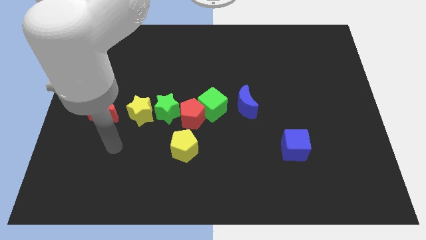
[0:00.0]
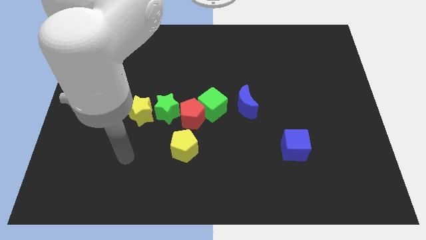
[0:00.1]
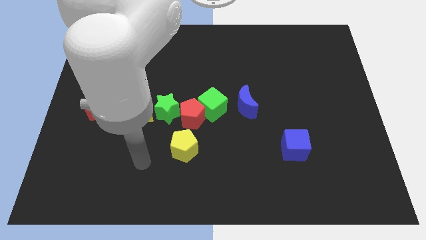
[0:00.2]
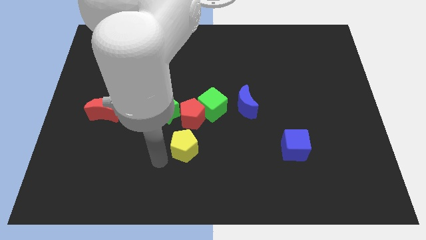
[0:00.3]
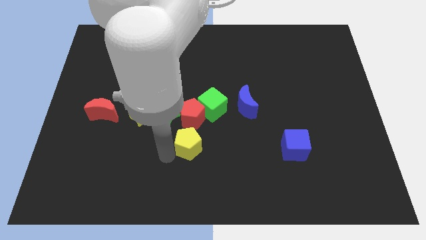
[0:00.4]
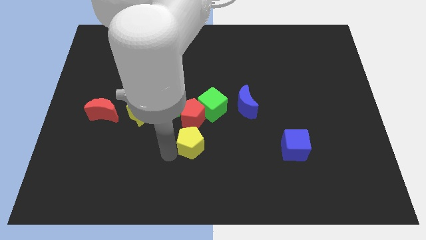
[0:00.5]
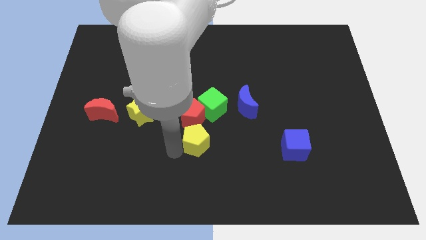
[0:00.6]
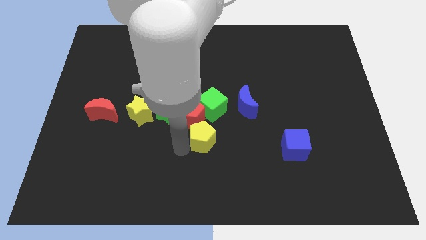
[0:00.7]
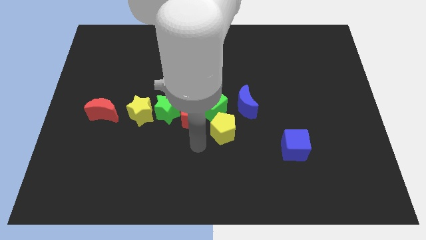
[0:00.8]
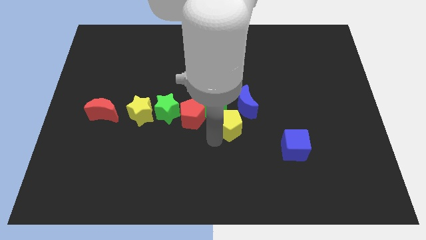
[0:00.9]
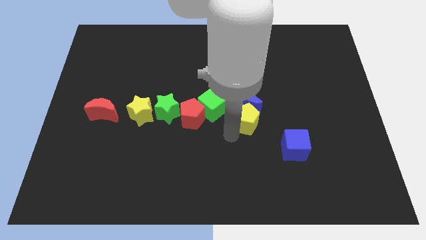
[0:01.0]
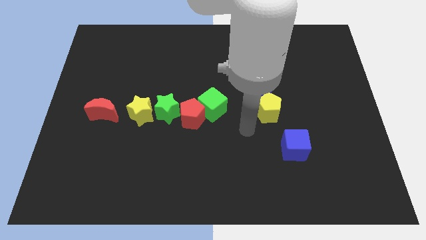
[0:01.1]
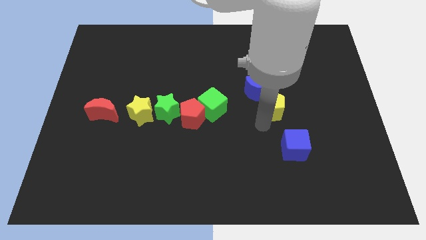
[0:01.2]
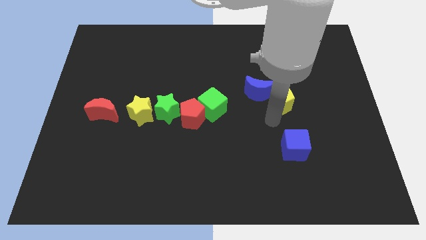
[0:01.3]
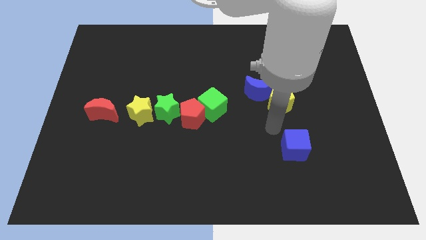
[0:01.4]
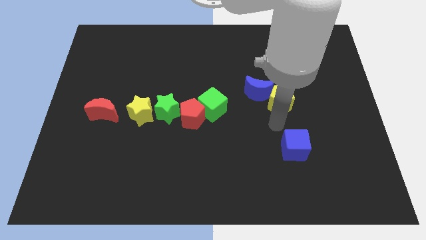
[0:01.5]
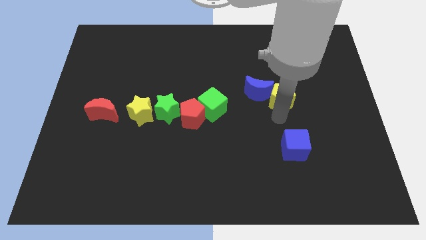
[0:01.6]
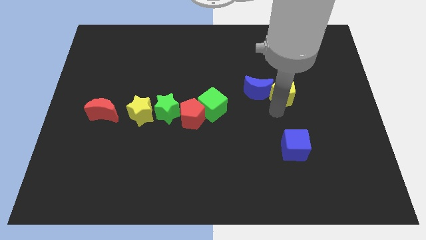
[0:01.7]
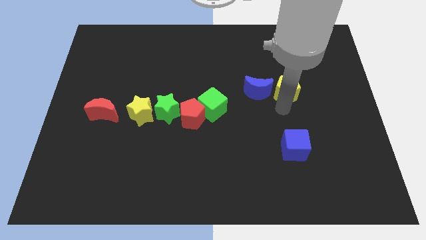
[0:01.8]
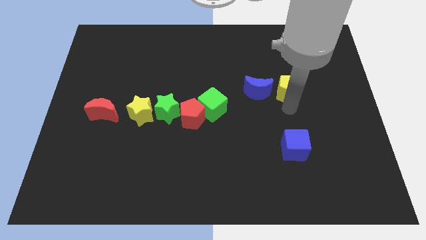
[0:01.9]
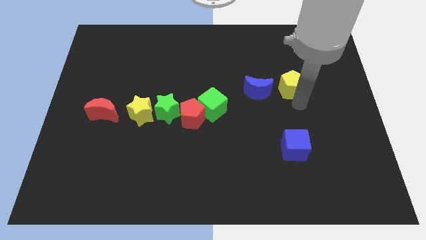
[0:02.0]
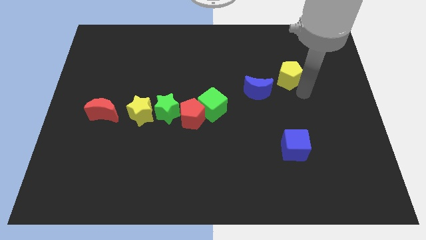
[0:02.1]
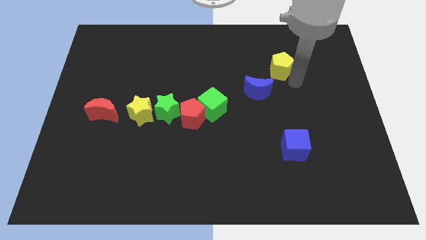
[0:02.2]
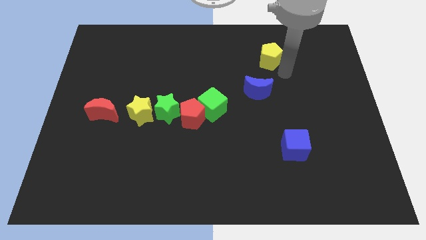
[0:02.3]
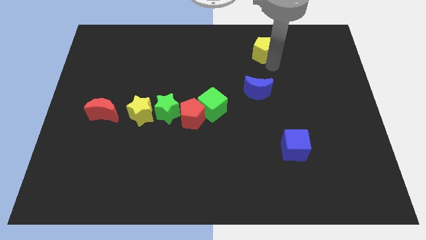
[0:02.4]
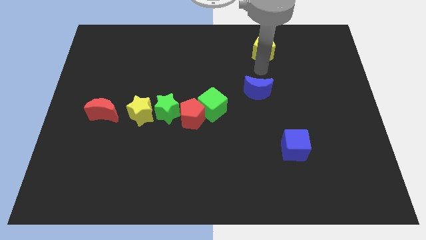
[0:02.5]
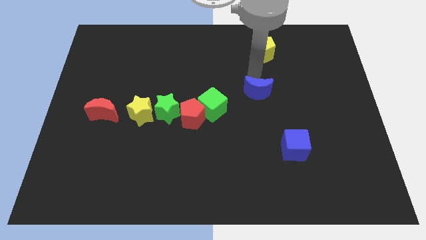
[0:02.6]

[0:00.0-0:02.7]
push the yellow pentagon towards the top center of the board

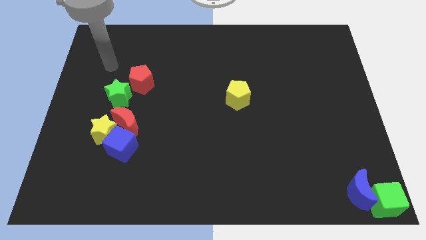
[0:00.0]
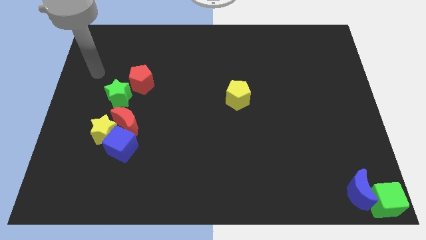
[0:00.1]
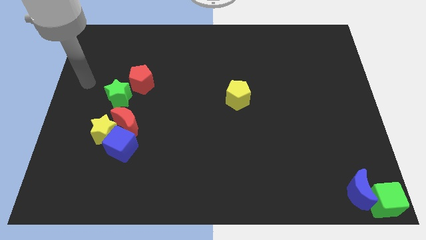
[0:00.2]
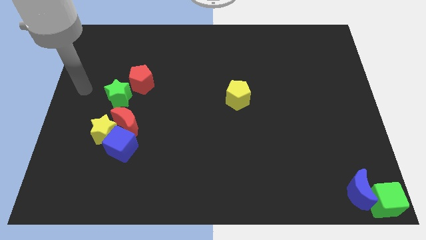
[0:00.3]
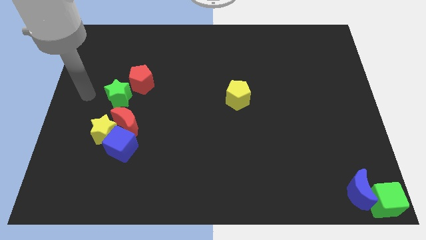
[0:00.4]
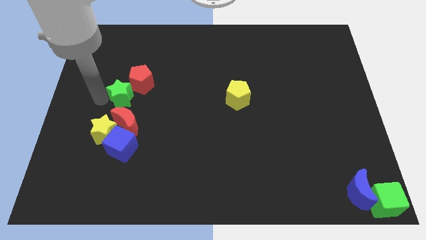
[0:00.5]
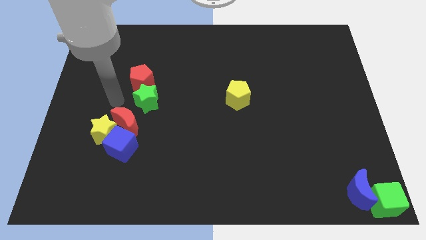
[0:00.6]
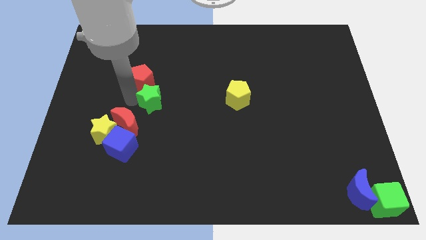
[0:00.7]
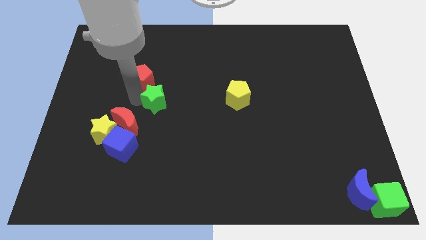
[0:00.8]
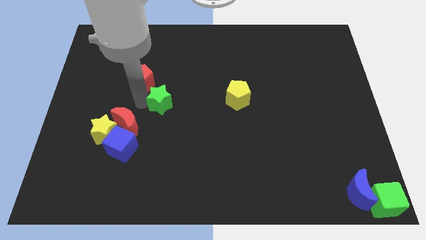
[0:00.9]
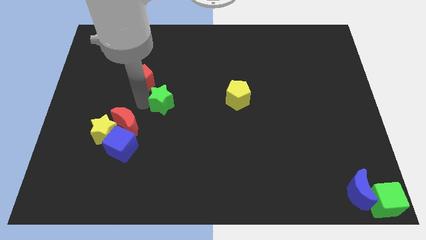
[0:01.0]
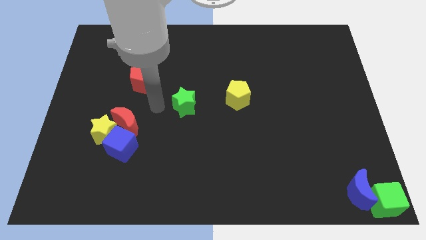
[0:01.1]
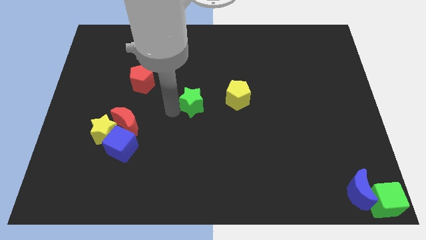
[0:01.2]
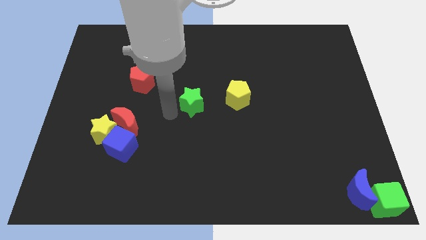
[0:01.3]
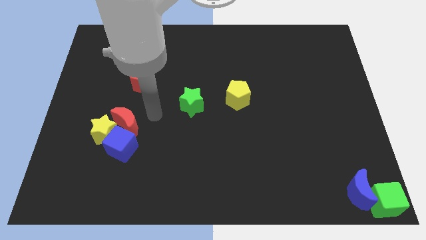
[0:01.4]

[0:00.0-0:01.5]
push green star to the center of the board

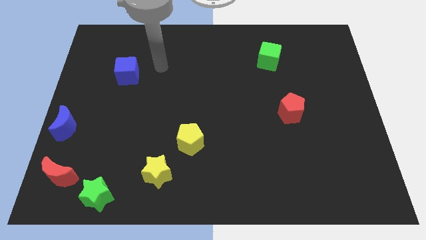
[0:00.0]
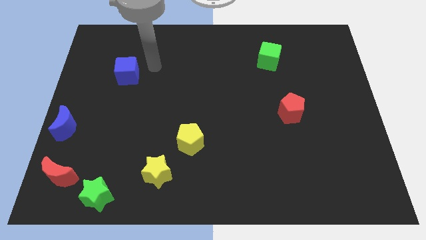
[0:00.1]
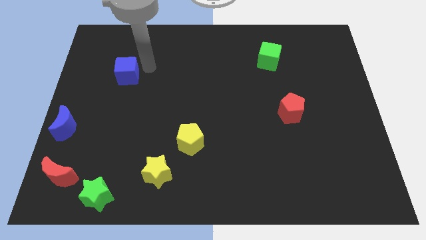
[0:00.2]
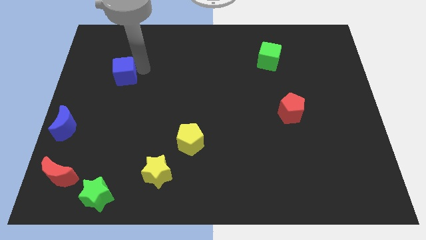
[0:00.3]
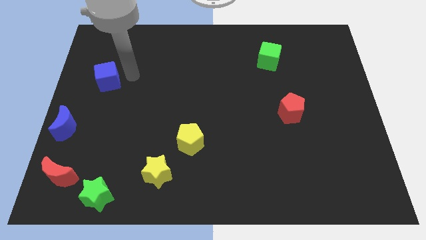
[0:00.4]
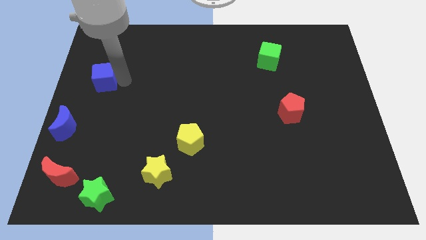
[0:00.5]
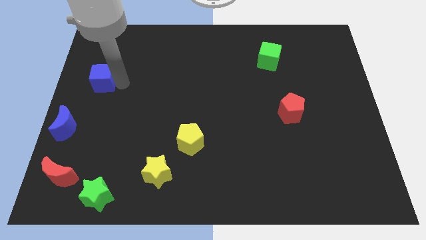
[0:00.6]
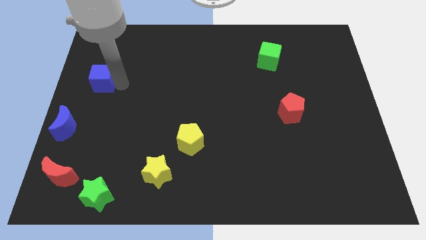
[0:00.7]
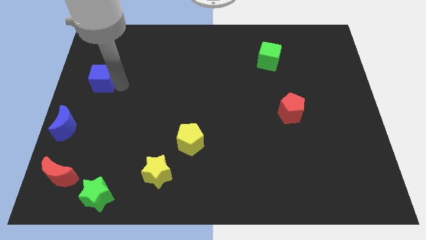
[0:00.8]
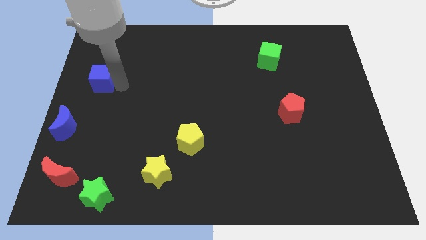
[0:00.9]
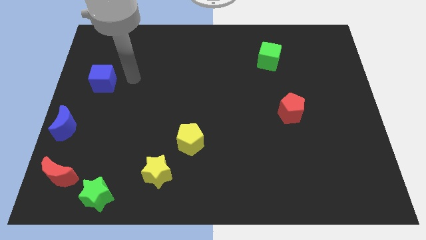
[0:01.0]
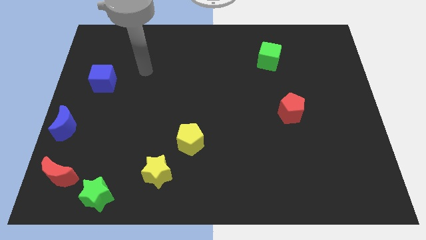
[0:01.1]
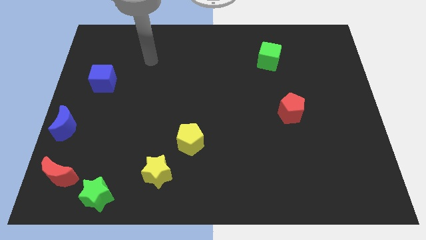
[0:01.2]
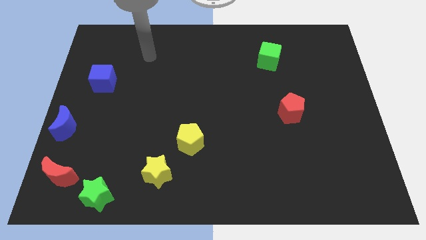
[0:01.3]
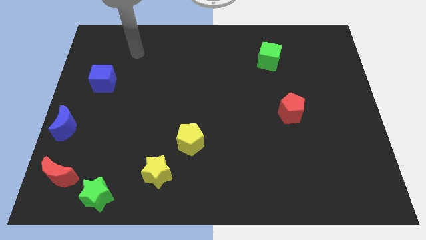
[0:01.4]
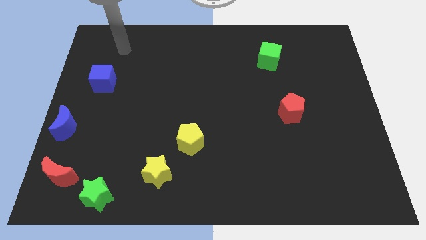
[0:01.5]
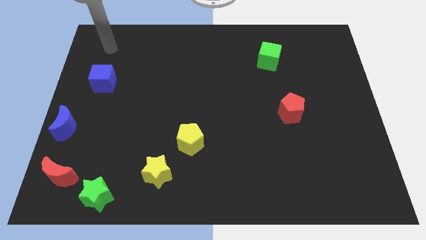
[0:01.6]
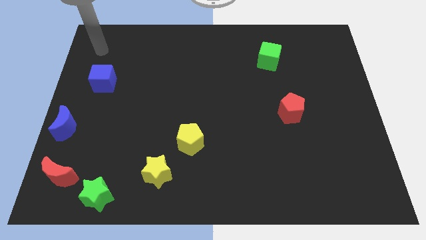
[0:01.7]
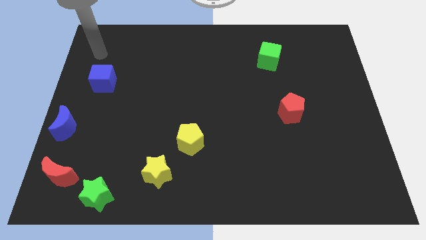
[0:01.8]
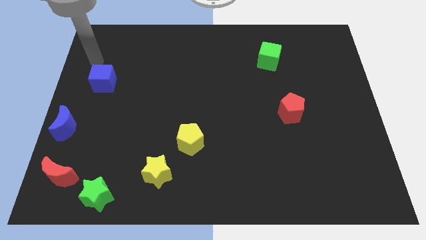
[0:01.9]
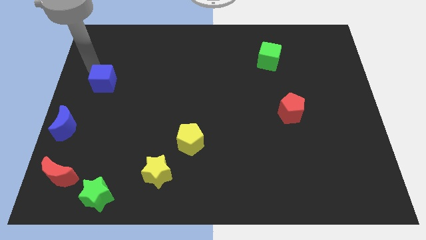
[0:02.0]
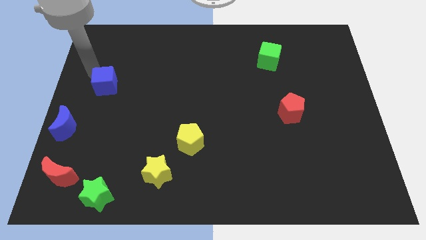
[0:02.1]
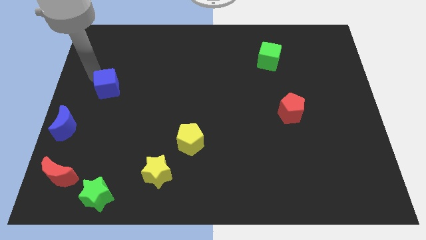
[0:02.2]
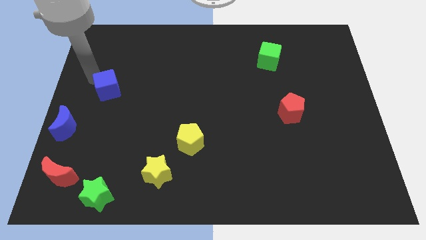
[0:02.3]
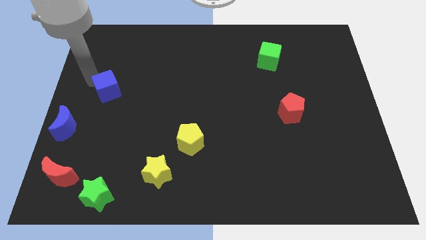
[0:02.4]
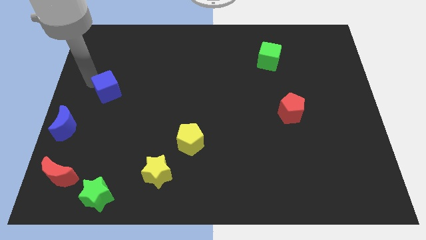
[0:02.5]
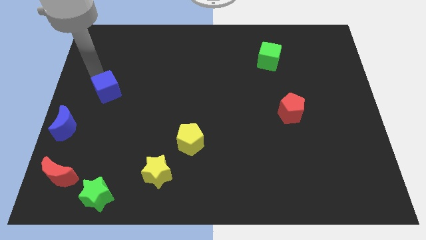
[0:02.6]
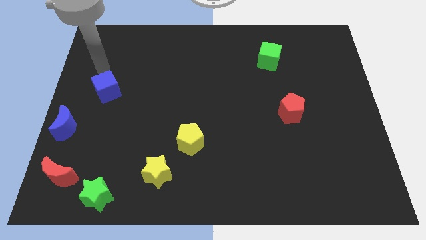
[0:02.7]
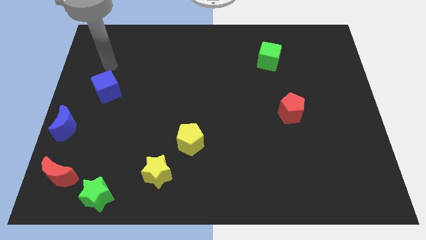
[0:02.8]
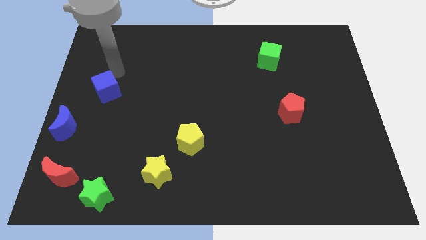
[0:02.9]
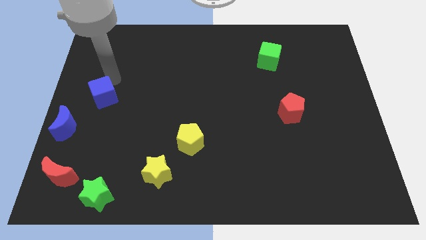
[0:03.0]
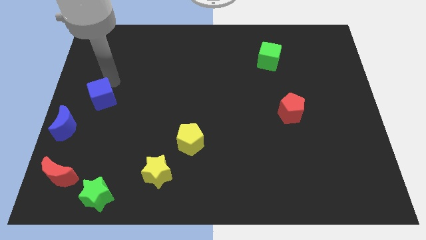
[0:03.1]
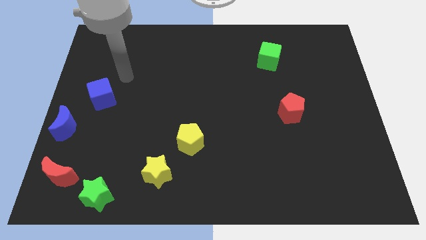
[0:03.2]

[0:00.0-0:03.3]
push the blue cube towards the top right side of the blue crescent

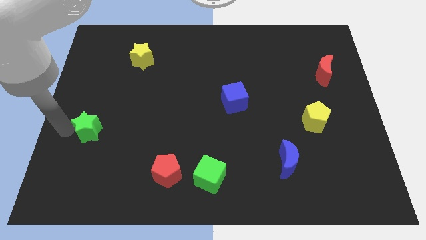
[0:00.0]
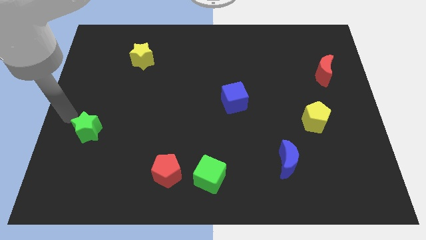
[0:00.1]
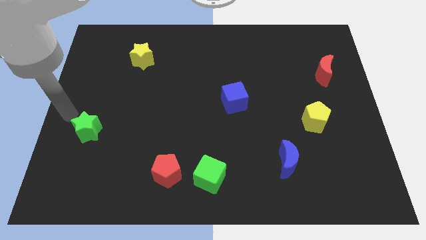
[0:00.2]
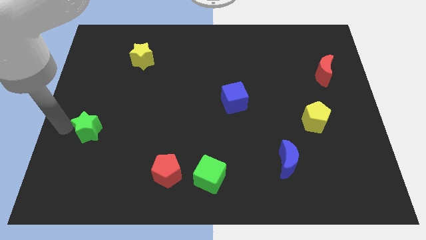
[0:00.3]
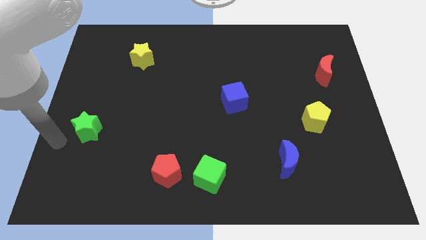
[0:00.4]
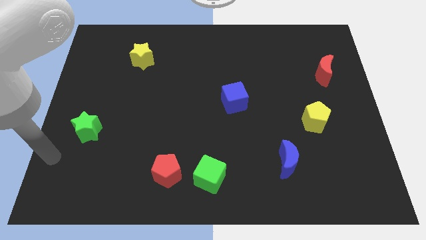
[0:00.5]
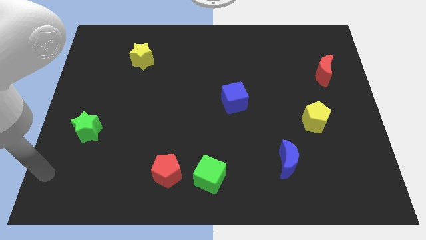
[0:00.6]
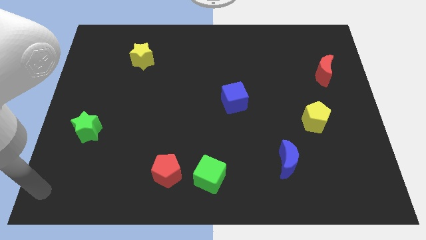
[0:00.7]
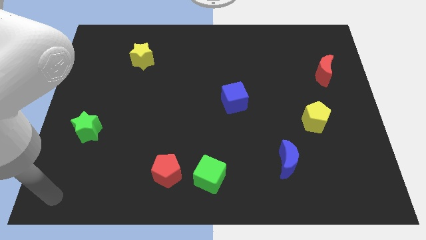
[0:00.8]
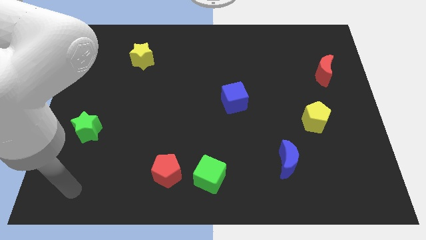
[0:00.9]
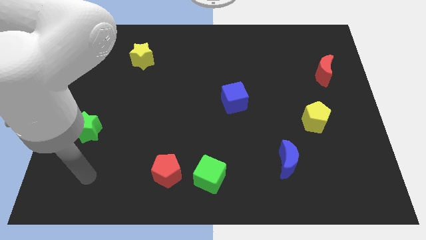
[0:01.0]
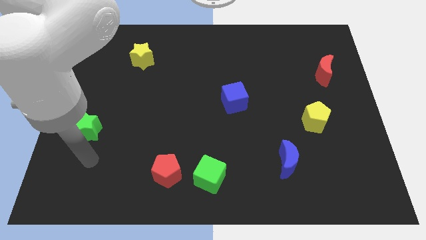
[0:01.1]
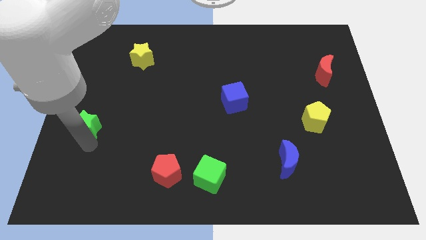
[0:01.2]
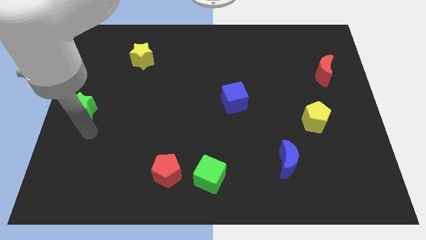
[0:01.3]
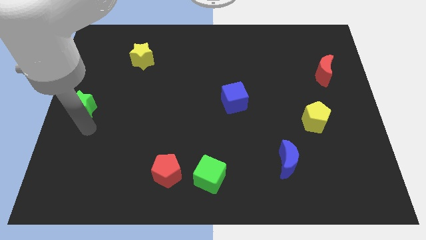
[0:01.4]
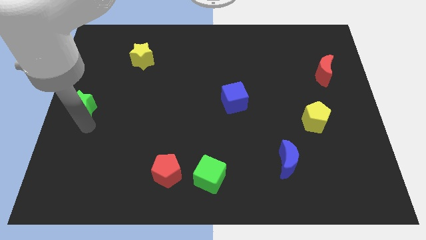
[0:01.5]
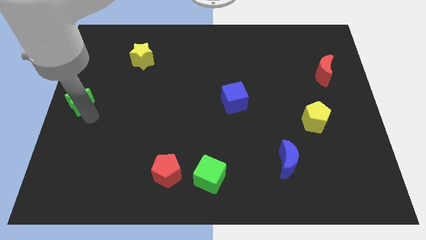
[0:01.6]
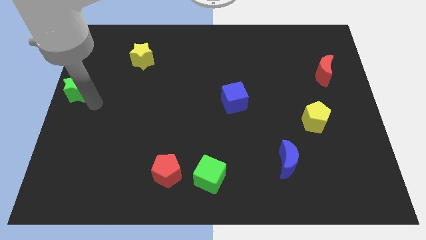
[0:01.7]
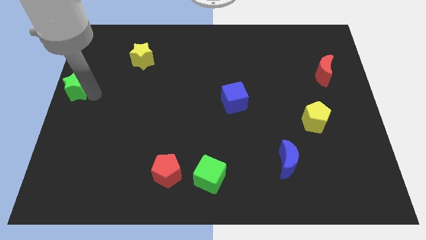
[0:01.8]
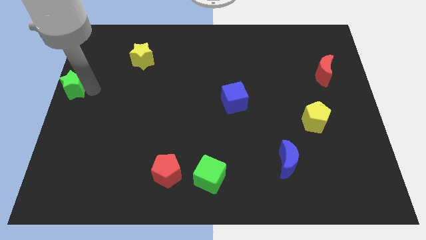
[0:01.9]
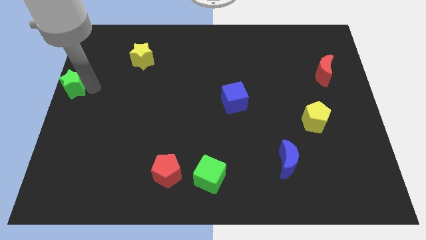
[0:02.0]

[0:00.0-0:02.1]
push the green star towards the top left
